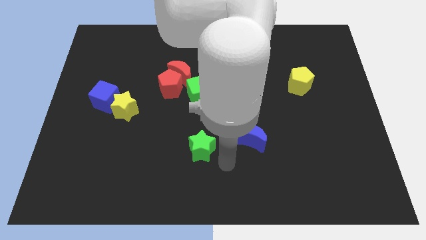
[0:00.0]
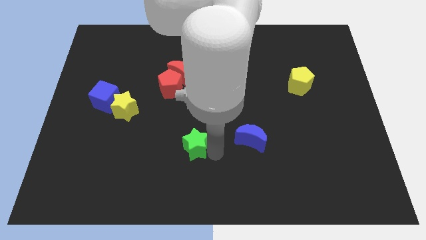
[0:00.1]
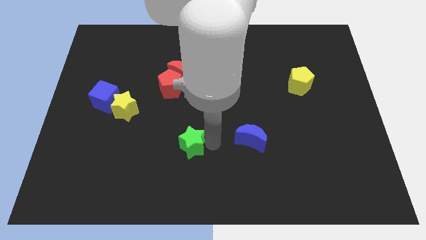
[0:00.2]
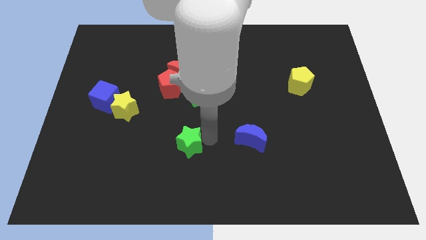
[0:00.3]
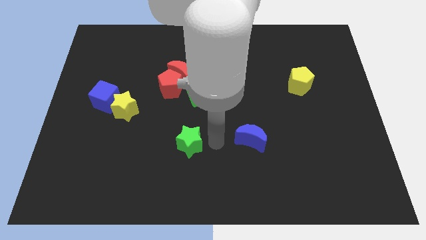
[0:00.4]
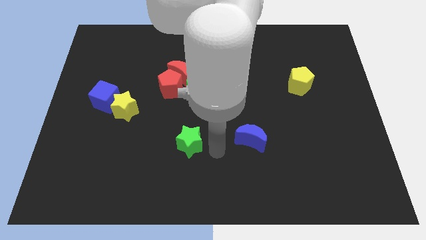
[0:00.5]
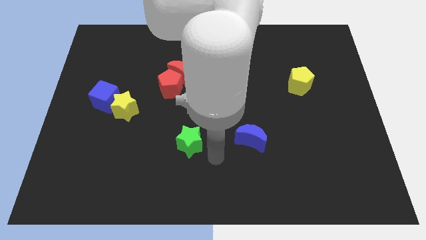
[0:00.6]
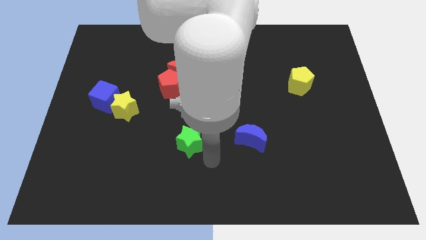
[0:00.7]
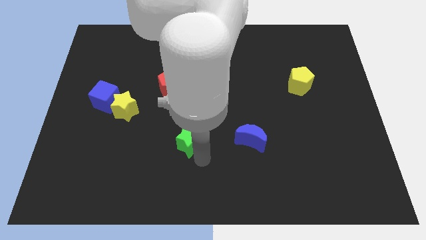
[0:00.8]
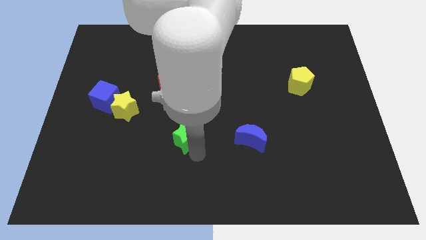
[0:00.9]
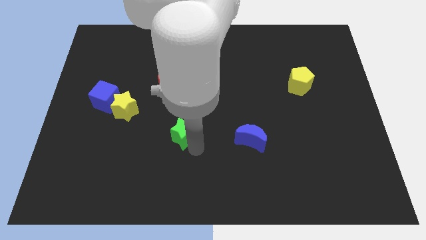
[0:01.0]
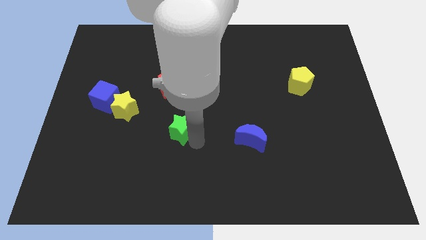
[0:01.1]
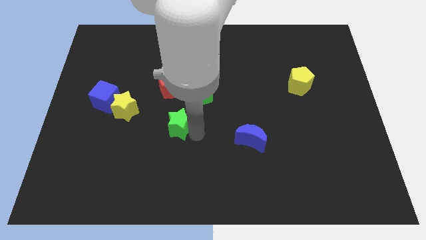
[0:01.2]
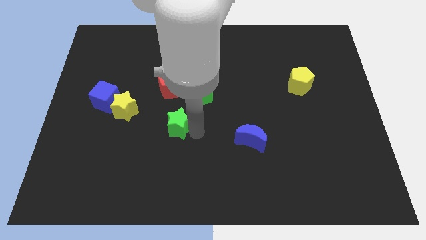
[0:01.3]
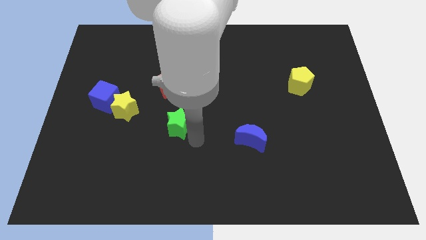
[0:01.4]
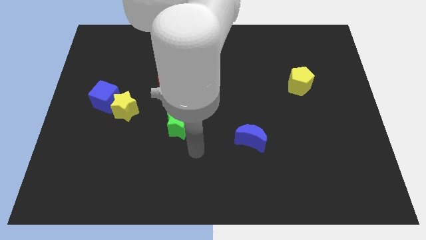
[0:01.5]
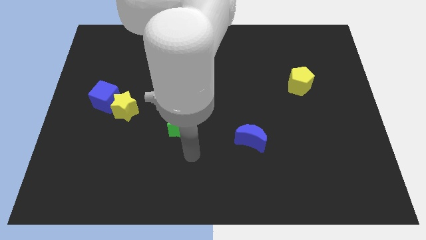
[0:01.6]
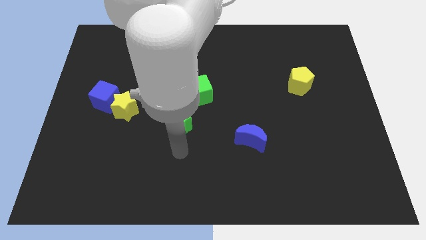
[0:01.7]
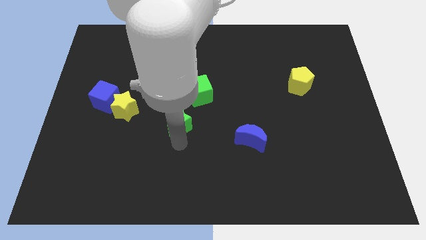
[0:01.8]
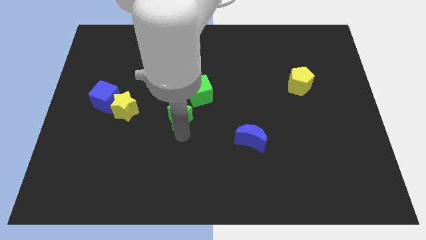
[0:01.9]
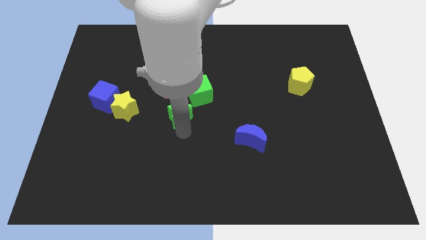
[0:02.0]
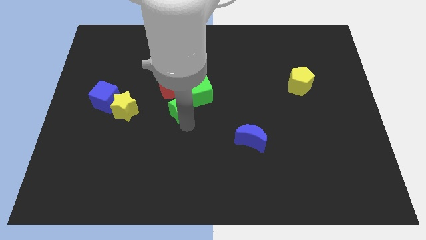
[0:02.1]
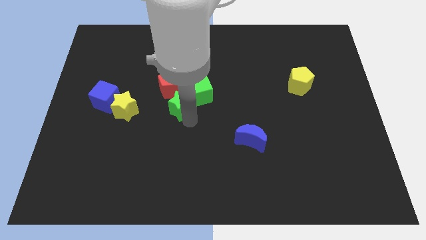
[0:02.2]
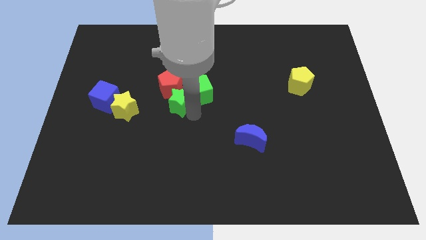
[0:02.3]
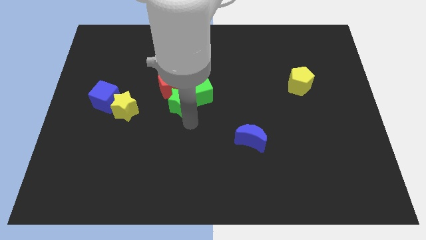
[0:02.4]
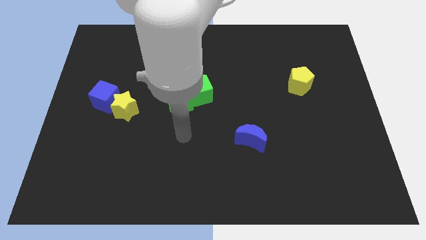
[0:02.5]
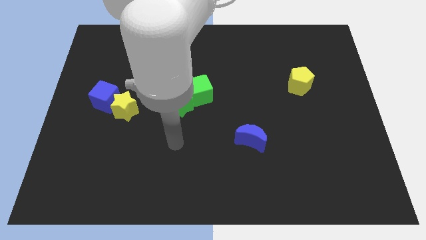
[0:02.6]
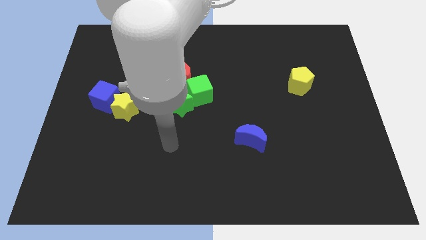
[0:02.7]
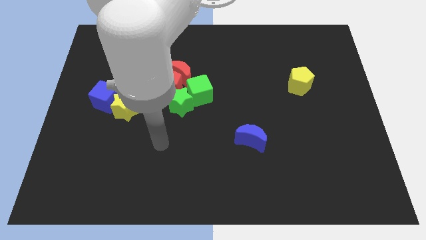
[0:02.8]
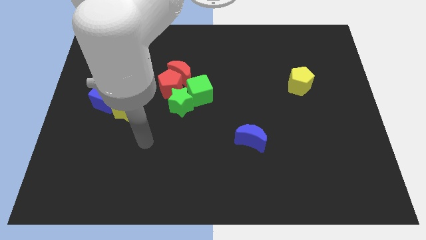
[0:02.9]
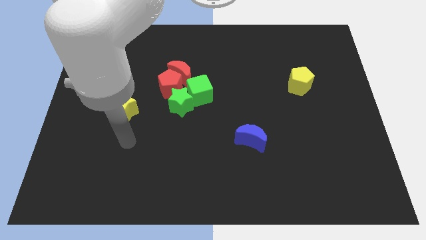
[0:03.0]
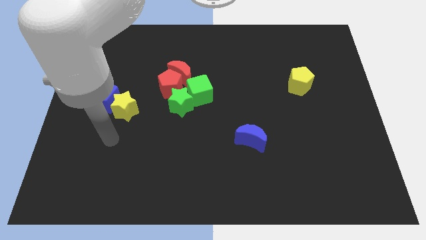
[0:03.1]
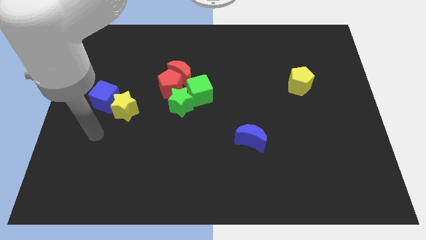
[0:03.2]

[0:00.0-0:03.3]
move the green star into the group of blocks

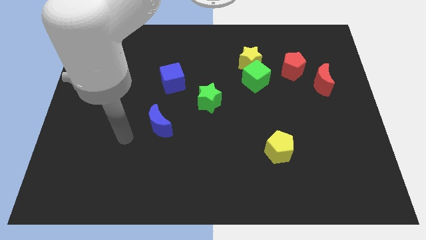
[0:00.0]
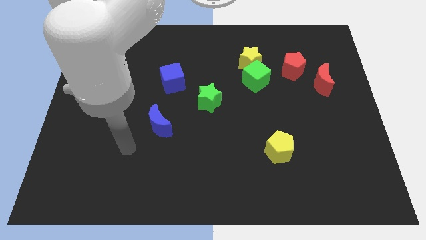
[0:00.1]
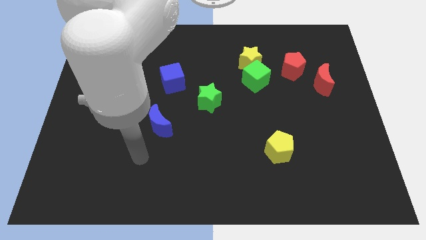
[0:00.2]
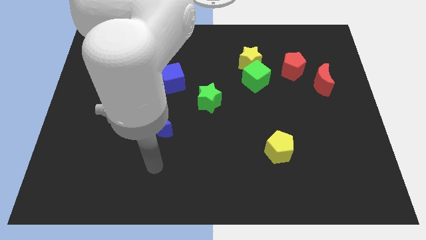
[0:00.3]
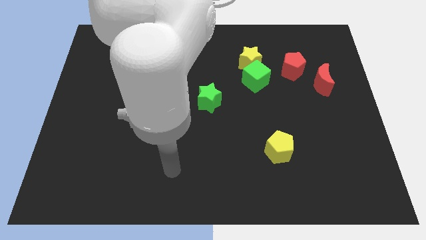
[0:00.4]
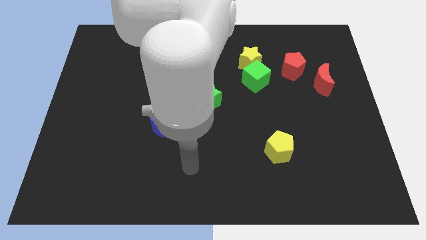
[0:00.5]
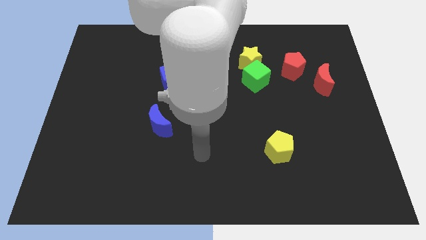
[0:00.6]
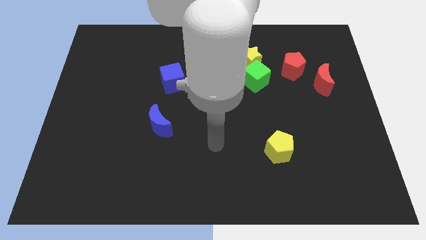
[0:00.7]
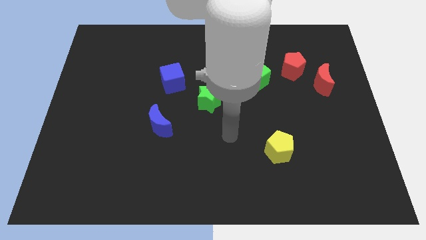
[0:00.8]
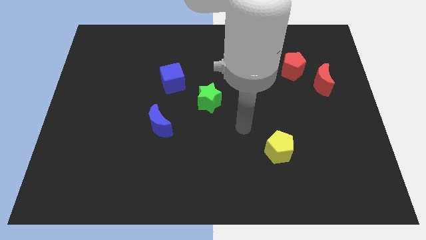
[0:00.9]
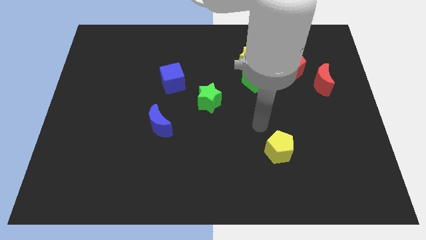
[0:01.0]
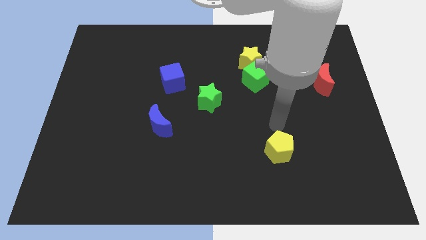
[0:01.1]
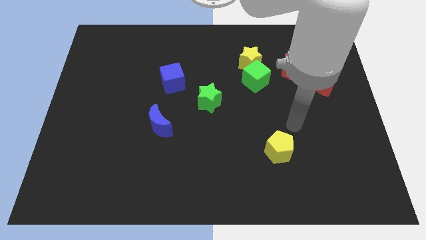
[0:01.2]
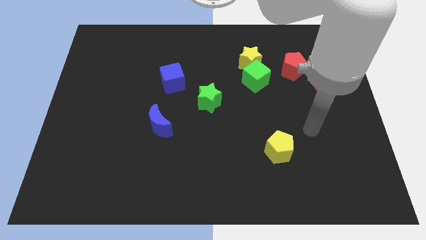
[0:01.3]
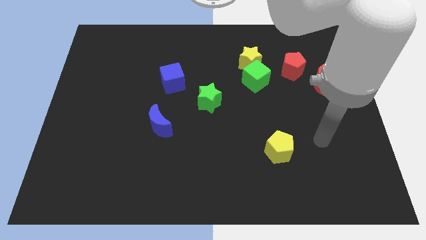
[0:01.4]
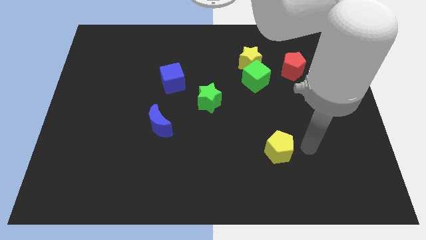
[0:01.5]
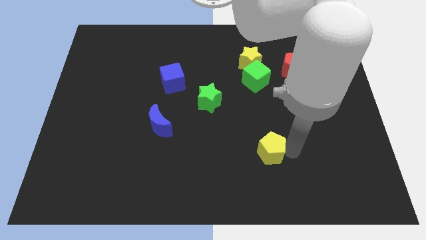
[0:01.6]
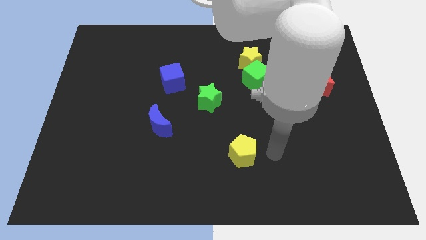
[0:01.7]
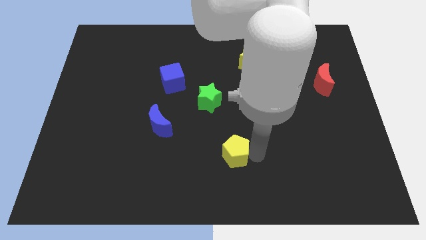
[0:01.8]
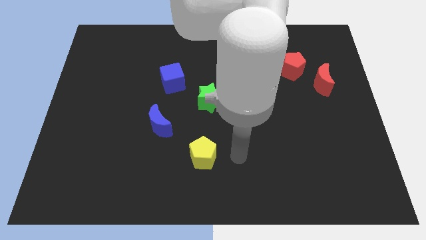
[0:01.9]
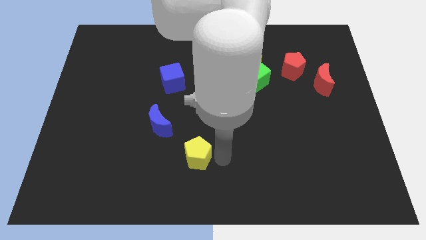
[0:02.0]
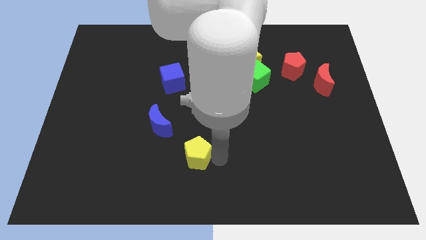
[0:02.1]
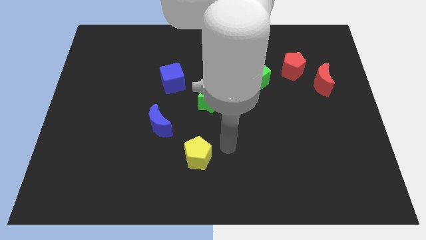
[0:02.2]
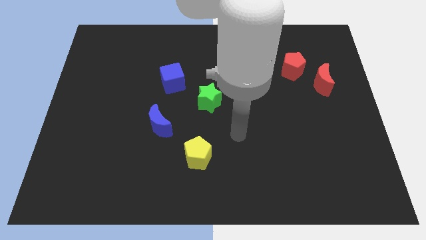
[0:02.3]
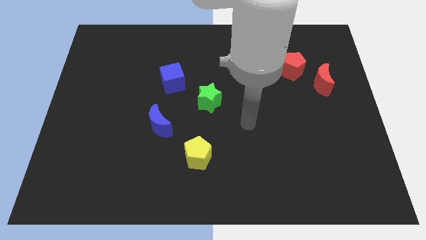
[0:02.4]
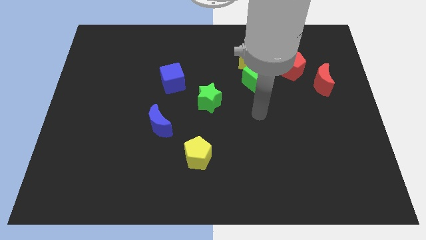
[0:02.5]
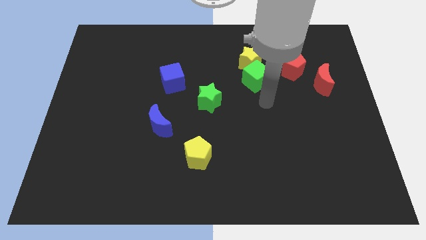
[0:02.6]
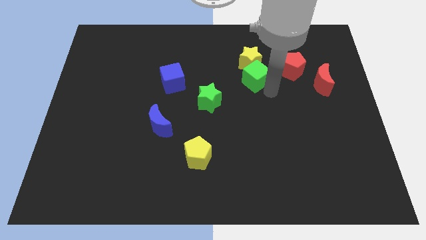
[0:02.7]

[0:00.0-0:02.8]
slide the yellow pentagon to the left side of the board

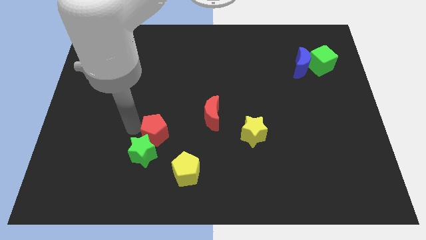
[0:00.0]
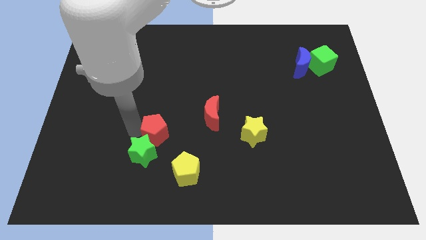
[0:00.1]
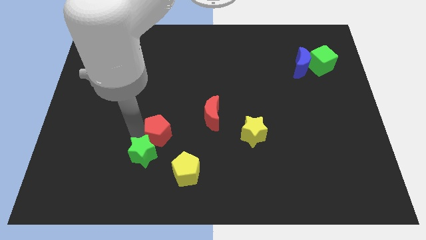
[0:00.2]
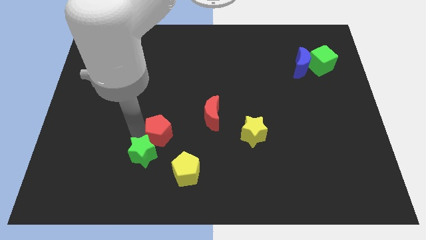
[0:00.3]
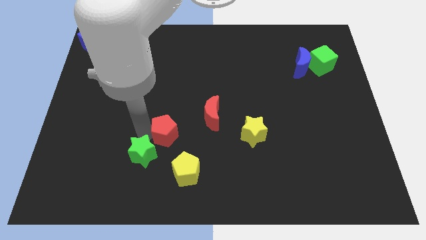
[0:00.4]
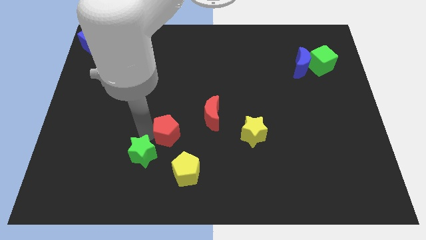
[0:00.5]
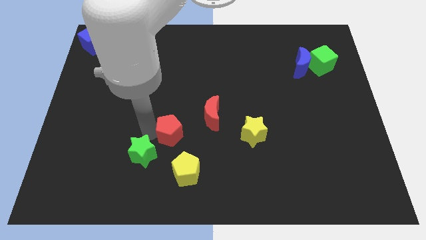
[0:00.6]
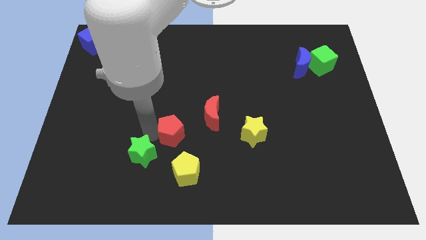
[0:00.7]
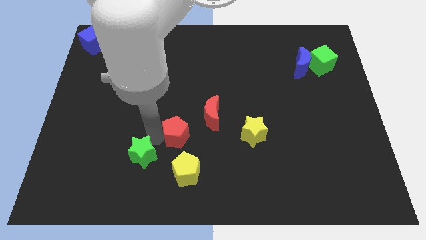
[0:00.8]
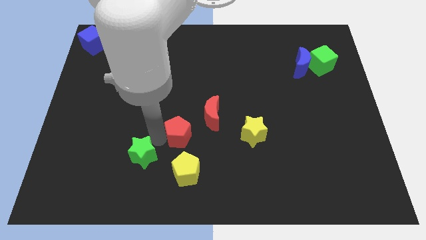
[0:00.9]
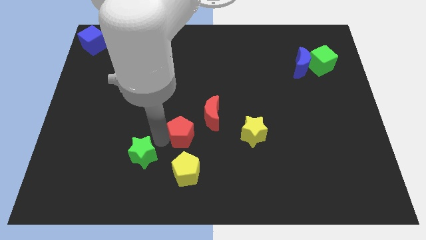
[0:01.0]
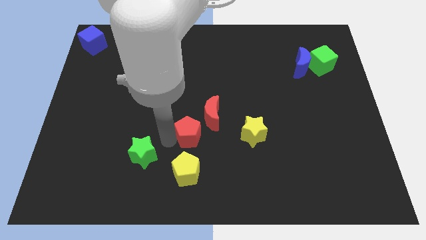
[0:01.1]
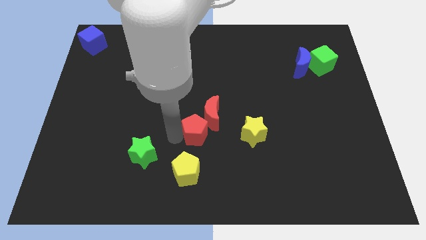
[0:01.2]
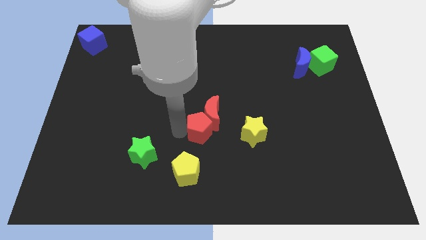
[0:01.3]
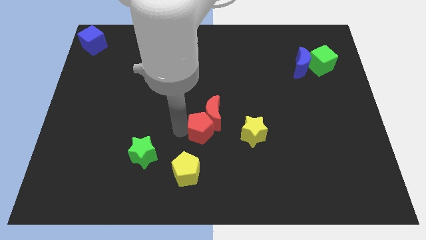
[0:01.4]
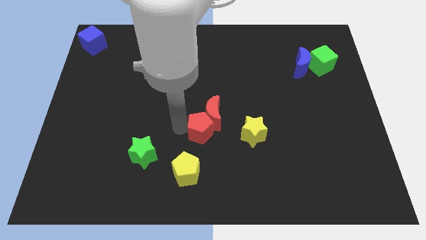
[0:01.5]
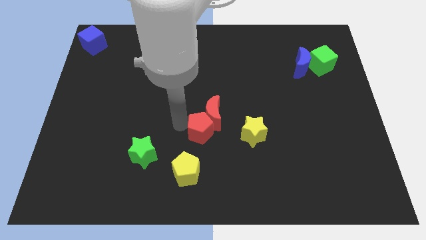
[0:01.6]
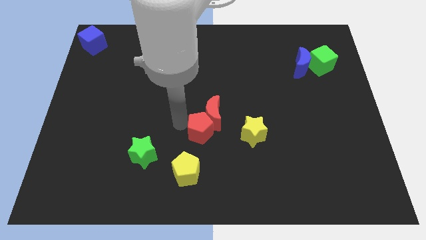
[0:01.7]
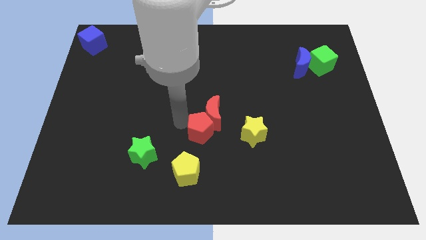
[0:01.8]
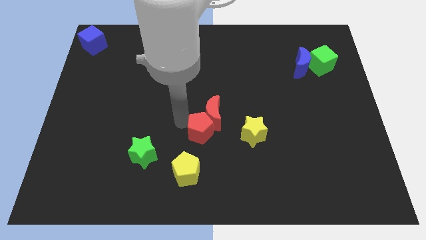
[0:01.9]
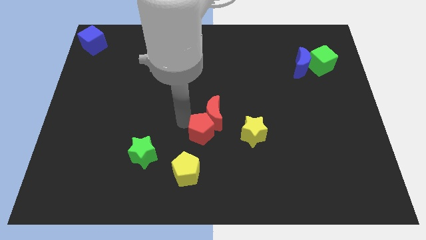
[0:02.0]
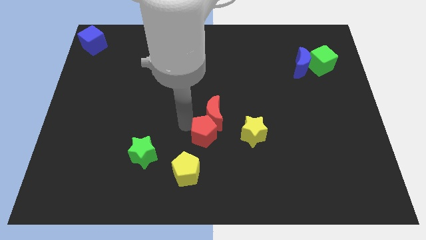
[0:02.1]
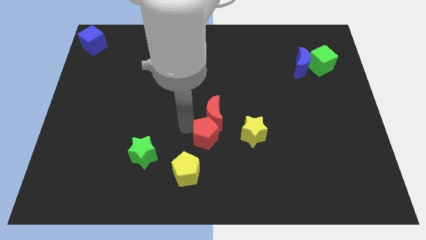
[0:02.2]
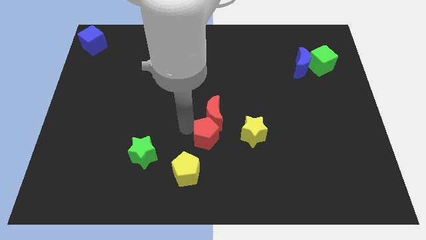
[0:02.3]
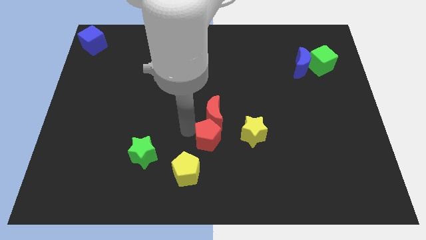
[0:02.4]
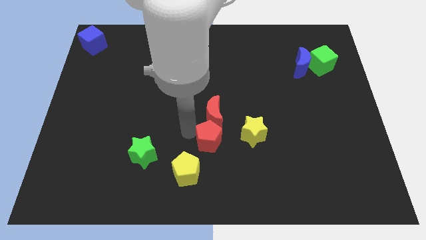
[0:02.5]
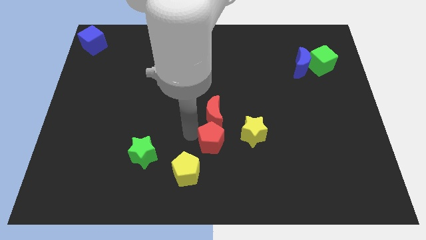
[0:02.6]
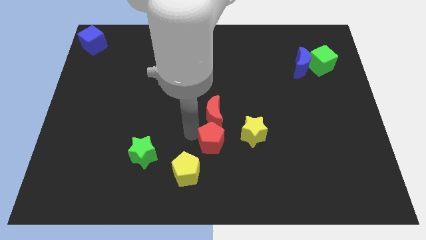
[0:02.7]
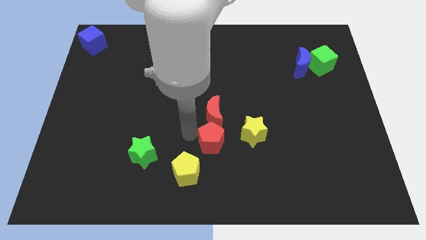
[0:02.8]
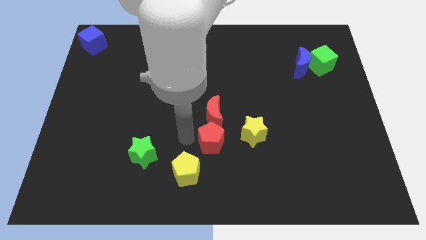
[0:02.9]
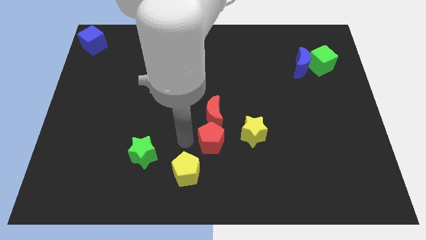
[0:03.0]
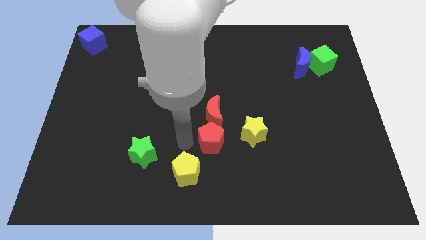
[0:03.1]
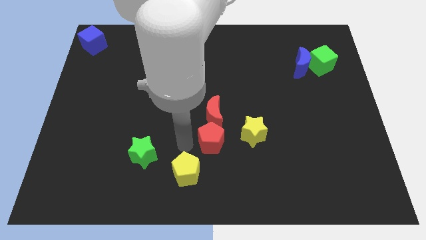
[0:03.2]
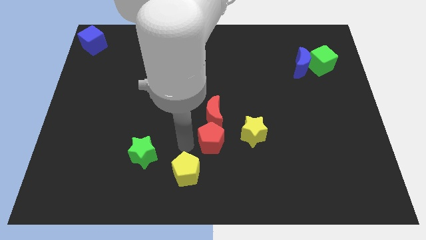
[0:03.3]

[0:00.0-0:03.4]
place red pentagon below red crescent
